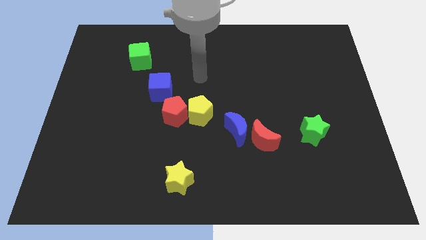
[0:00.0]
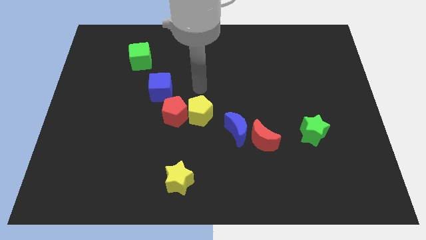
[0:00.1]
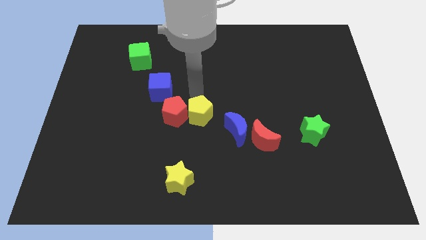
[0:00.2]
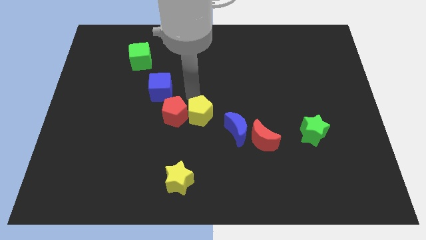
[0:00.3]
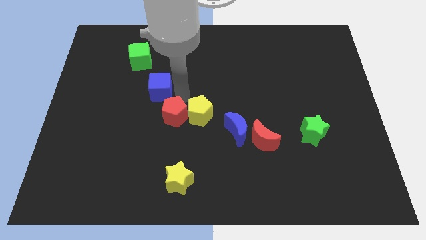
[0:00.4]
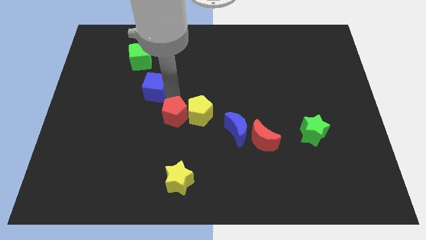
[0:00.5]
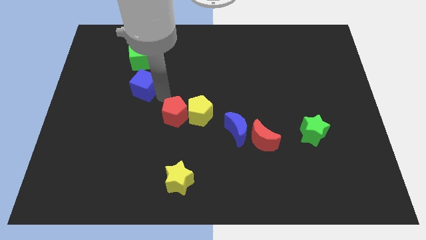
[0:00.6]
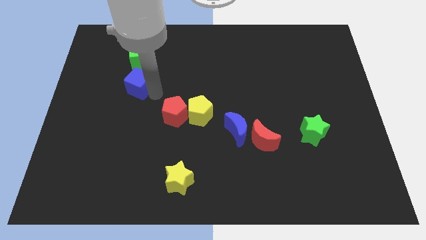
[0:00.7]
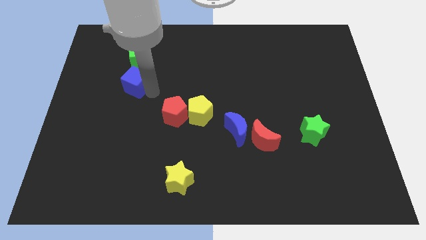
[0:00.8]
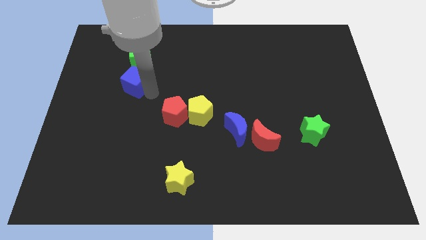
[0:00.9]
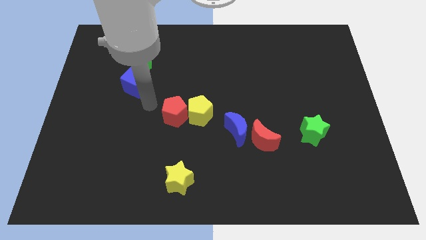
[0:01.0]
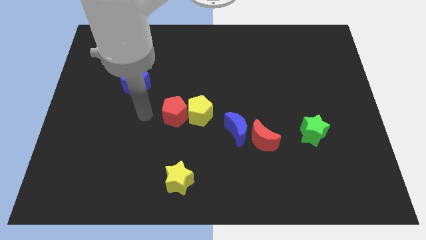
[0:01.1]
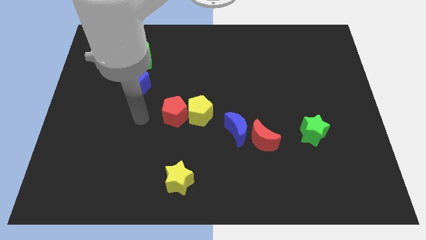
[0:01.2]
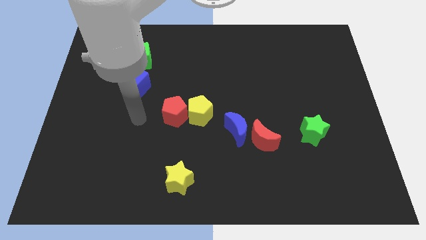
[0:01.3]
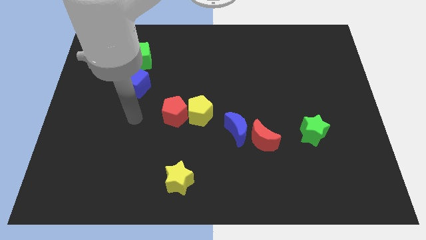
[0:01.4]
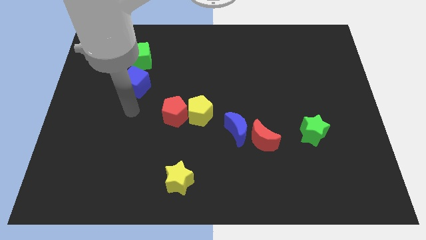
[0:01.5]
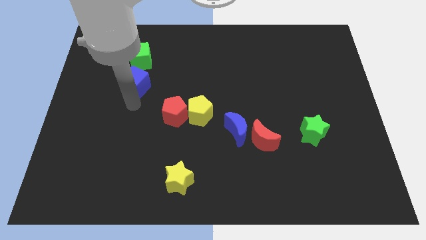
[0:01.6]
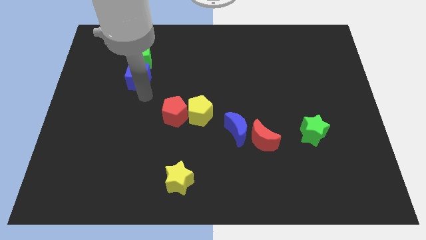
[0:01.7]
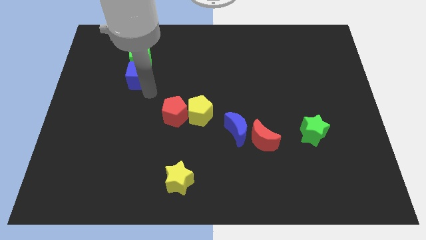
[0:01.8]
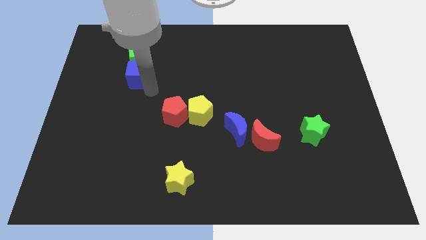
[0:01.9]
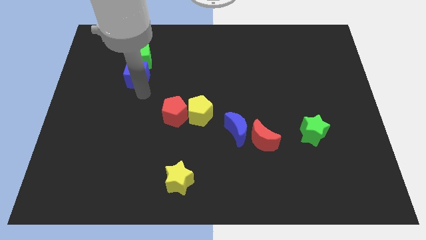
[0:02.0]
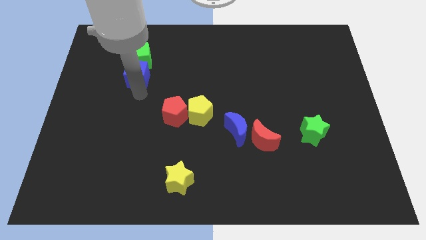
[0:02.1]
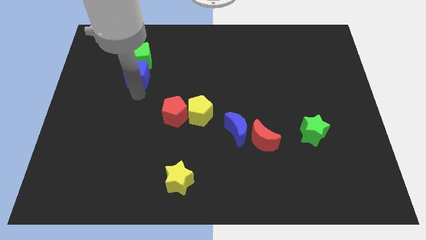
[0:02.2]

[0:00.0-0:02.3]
place blue cube below the green cube

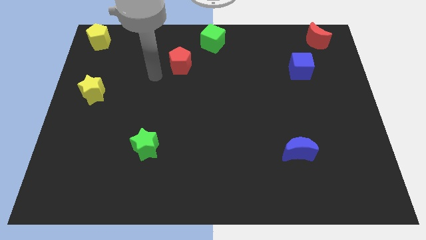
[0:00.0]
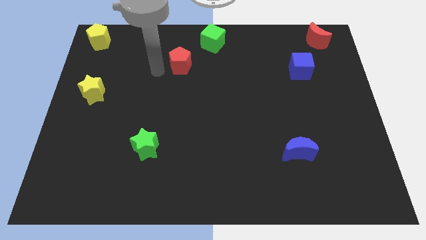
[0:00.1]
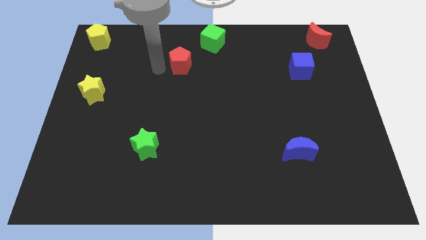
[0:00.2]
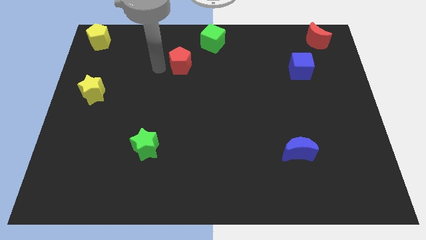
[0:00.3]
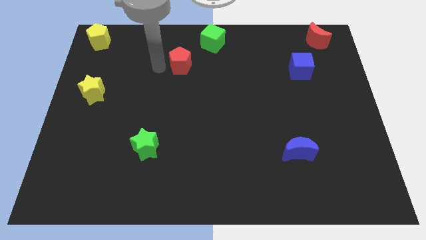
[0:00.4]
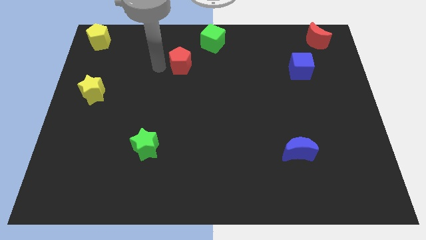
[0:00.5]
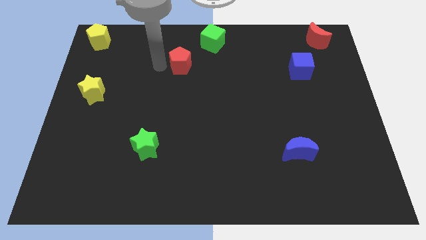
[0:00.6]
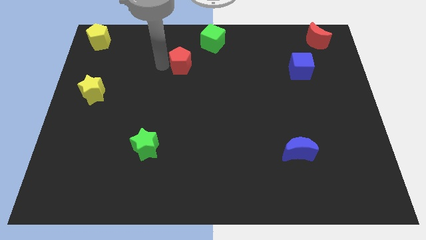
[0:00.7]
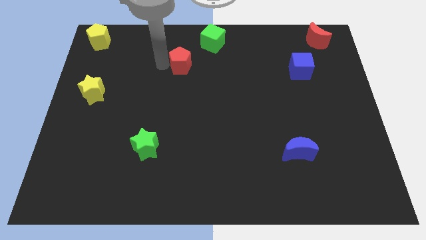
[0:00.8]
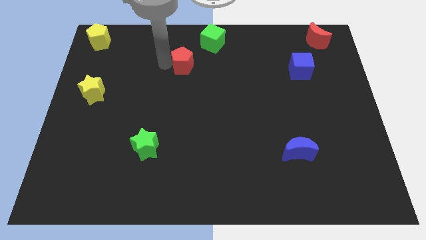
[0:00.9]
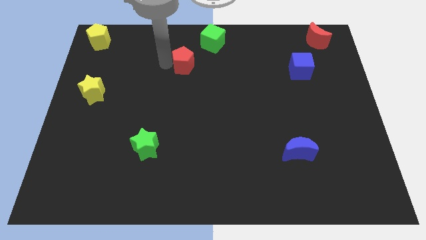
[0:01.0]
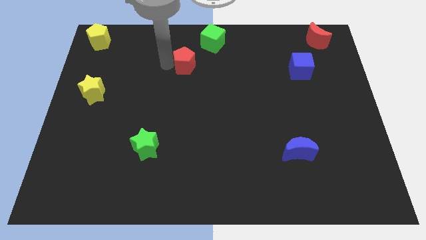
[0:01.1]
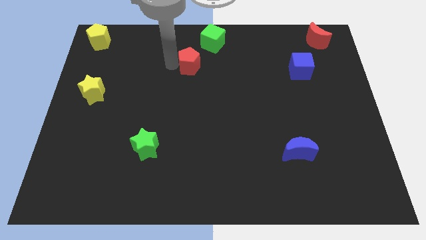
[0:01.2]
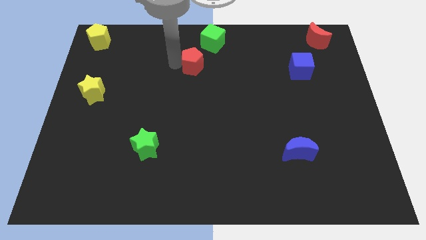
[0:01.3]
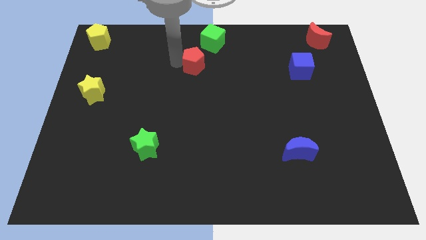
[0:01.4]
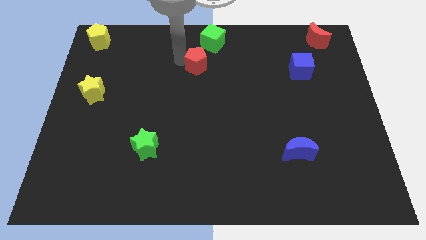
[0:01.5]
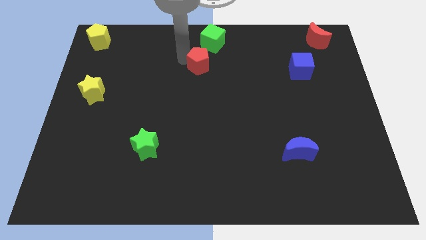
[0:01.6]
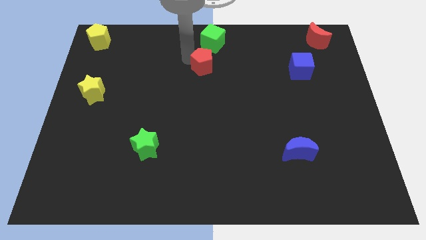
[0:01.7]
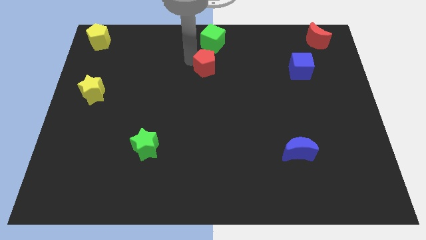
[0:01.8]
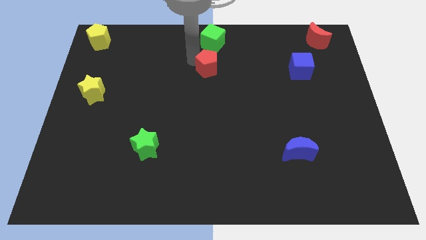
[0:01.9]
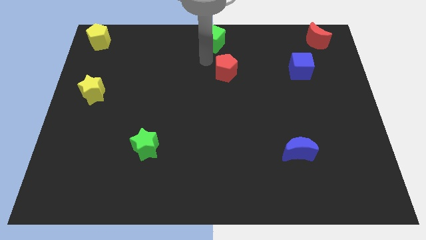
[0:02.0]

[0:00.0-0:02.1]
place the red pentagon under the green cube

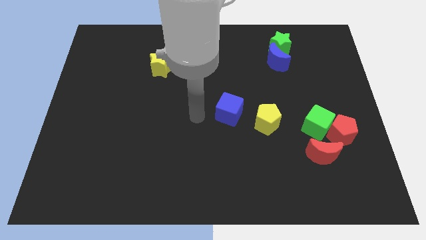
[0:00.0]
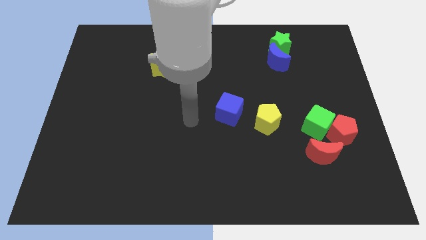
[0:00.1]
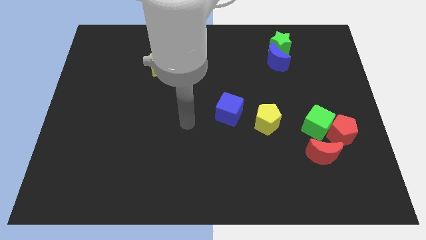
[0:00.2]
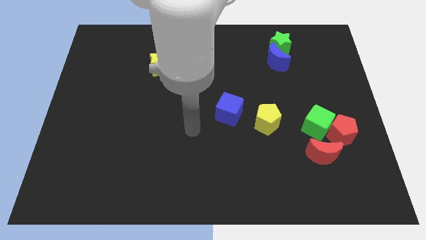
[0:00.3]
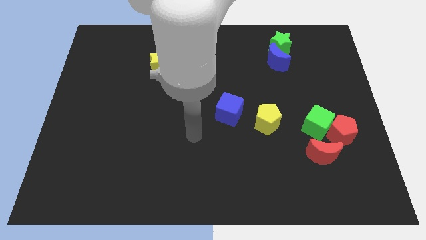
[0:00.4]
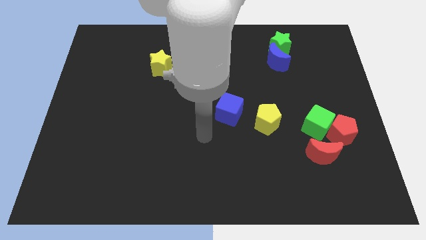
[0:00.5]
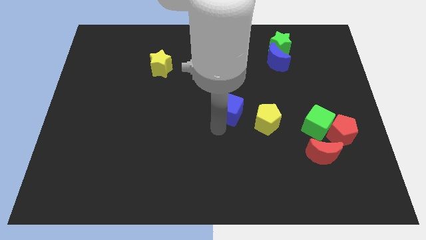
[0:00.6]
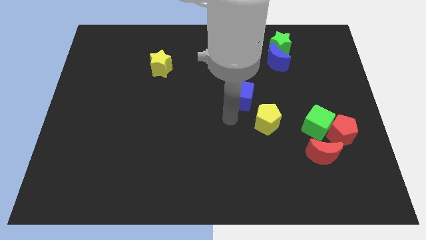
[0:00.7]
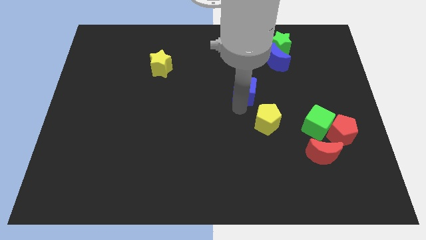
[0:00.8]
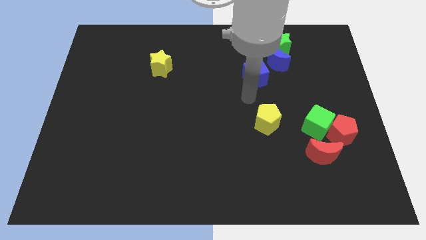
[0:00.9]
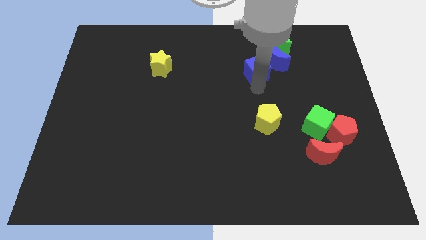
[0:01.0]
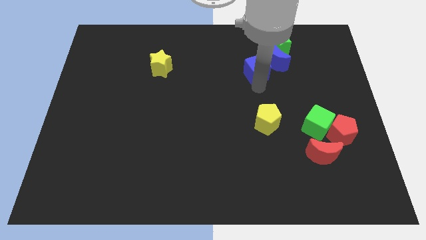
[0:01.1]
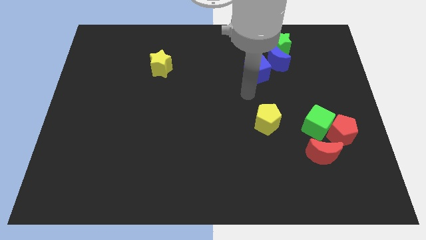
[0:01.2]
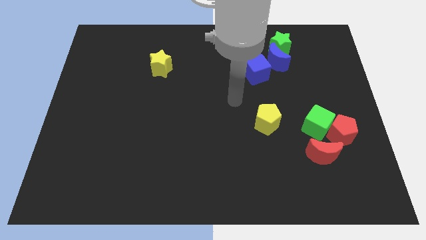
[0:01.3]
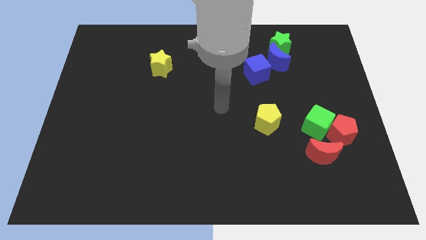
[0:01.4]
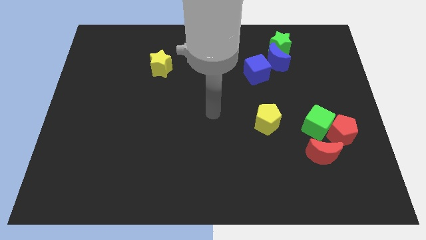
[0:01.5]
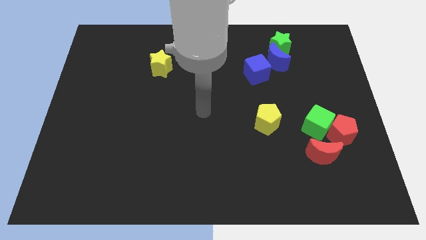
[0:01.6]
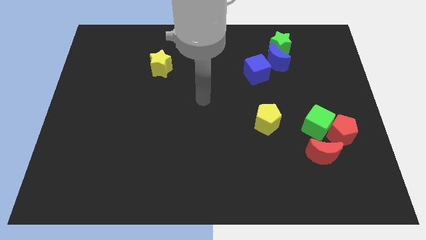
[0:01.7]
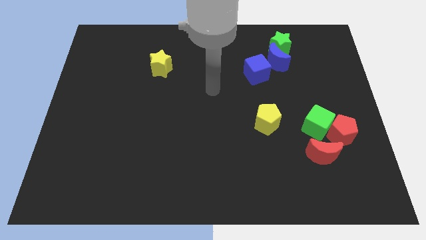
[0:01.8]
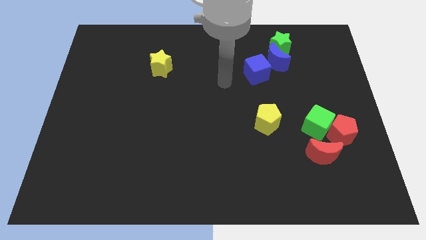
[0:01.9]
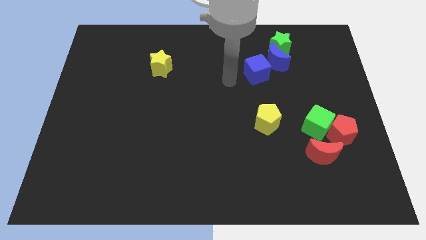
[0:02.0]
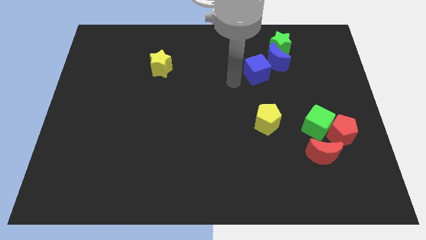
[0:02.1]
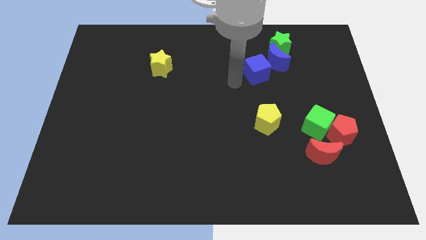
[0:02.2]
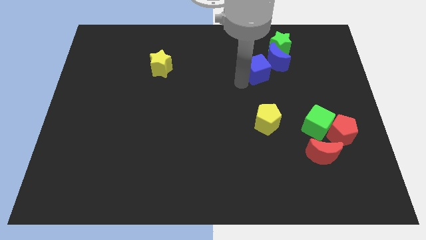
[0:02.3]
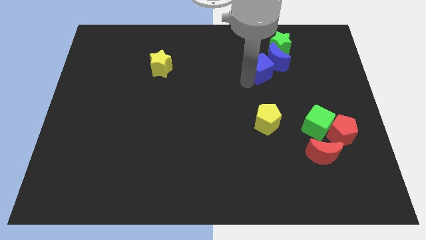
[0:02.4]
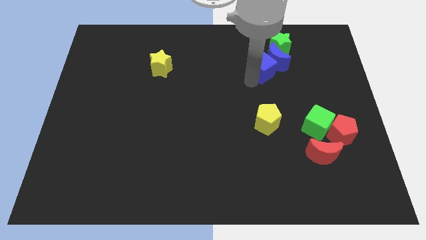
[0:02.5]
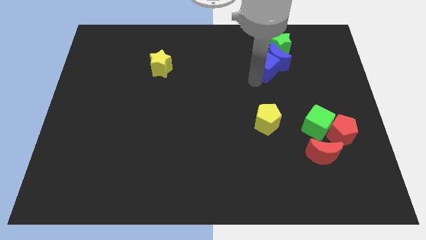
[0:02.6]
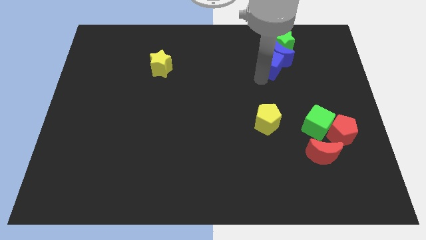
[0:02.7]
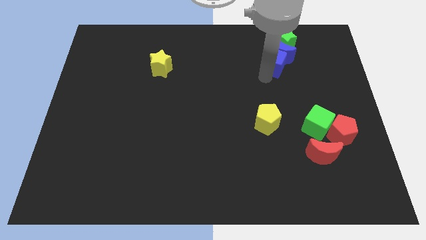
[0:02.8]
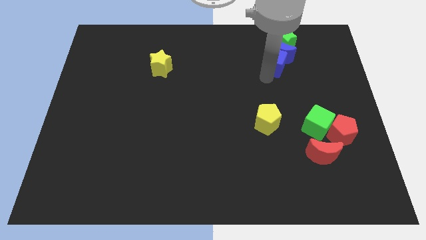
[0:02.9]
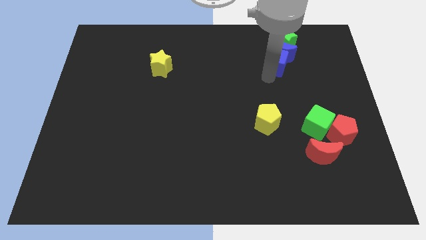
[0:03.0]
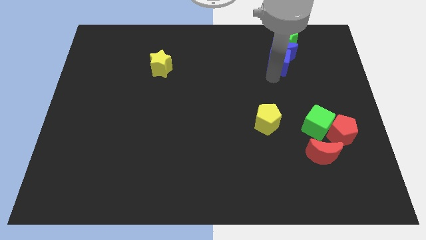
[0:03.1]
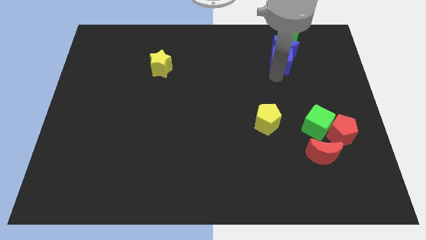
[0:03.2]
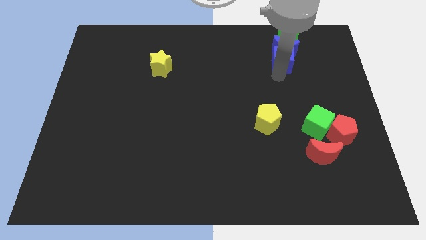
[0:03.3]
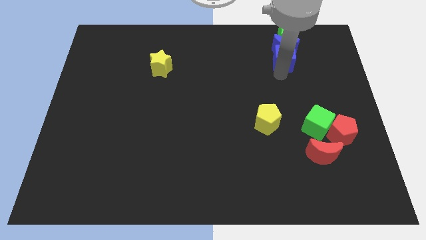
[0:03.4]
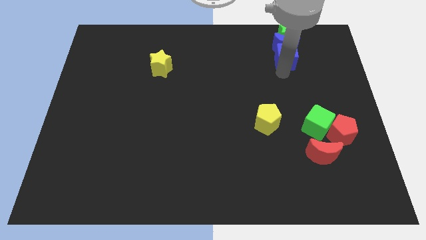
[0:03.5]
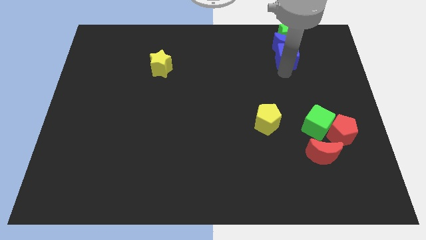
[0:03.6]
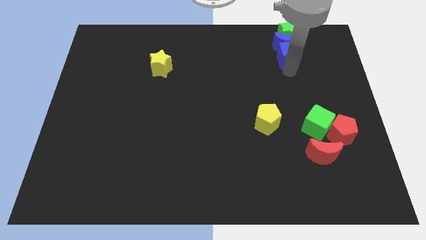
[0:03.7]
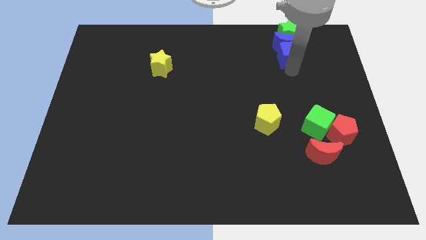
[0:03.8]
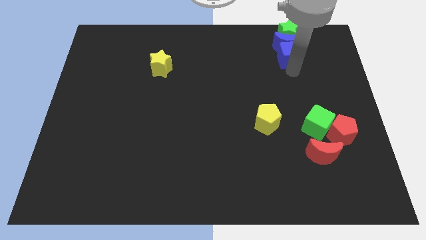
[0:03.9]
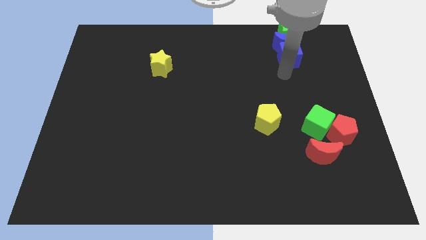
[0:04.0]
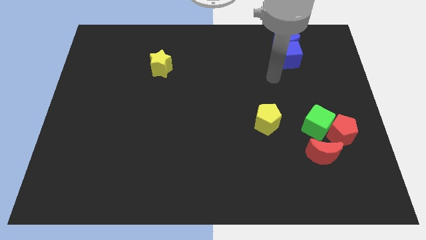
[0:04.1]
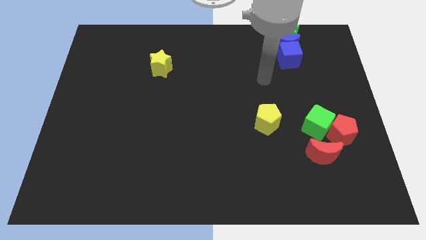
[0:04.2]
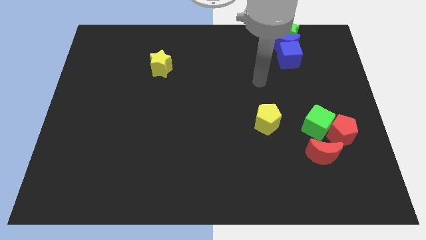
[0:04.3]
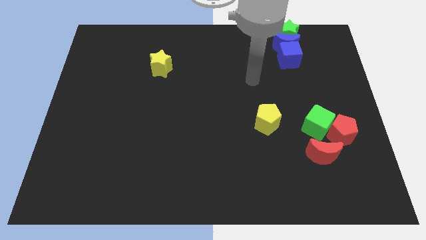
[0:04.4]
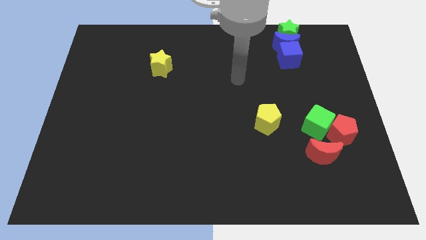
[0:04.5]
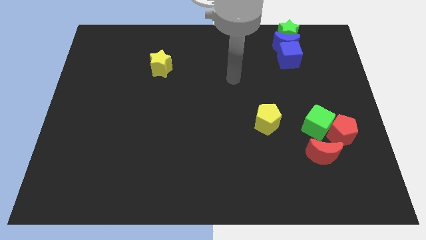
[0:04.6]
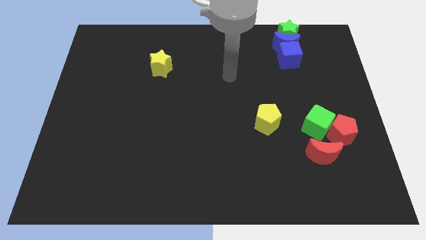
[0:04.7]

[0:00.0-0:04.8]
push the blue cube into the blue crescent
